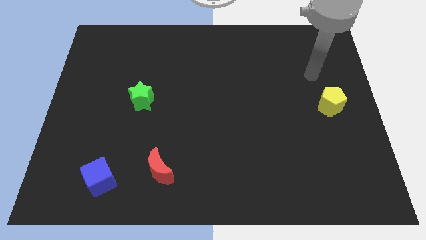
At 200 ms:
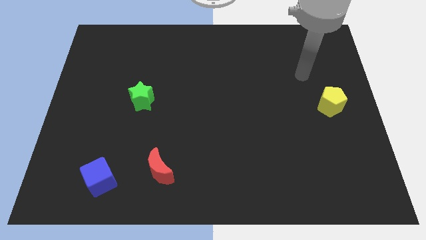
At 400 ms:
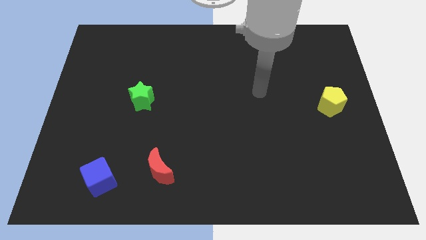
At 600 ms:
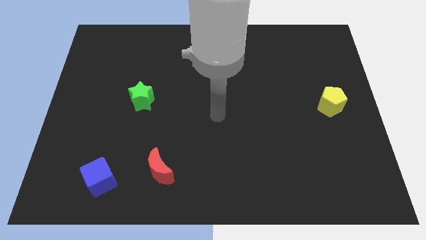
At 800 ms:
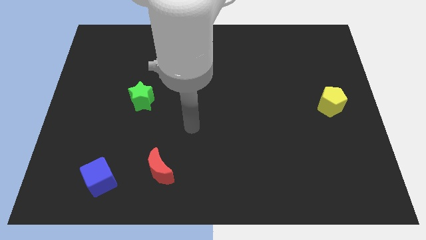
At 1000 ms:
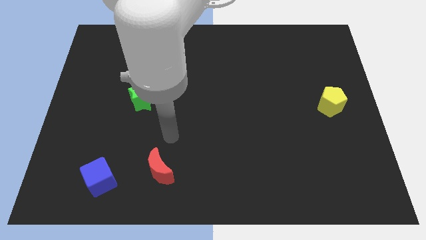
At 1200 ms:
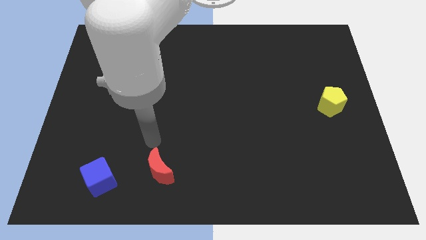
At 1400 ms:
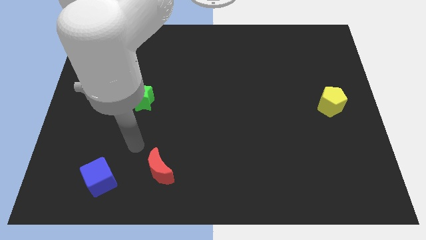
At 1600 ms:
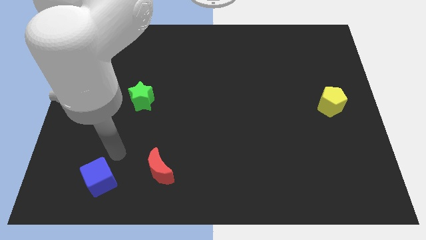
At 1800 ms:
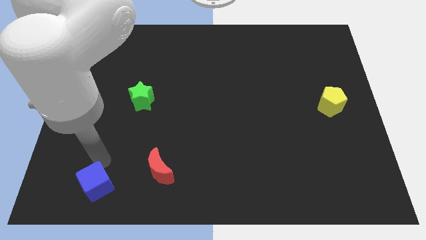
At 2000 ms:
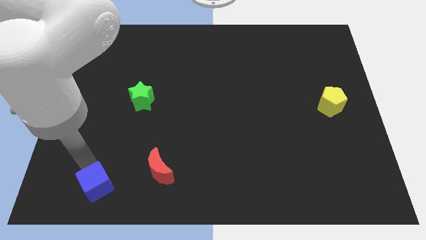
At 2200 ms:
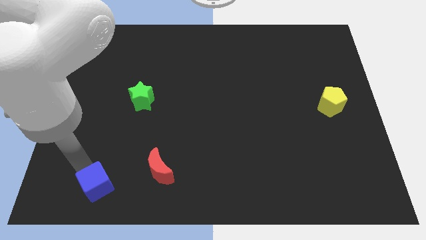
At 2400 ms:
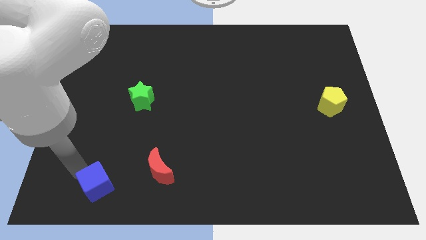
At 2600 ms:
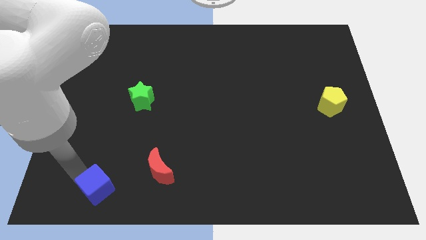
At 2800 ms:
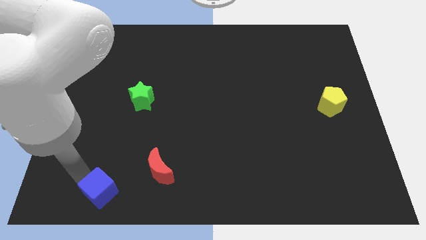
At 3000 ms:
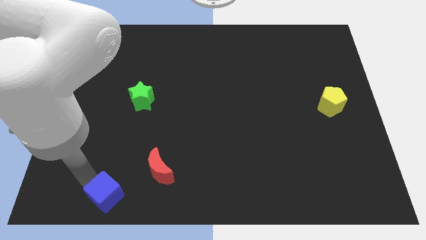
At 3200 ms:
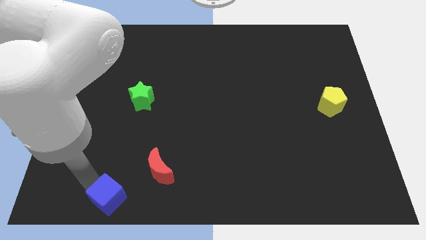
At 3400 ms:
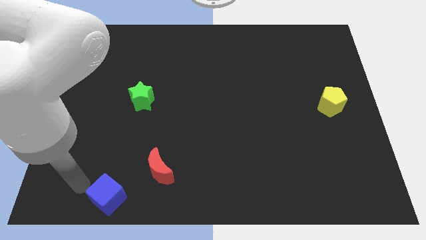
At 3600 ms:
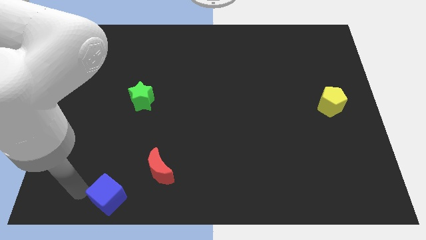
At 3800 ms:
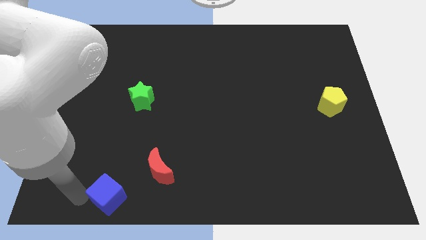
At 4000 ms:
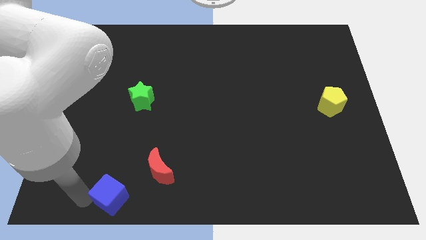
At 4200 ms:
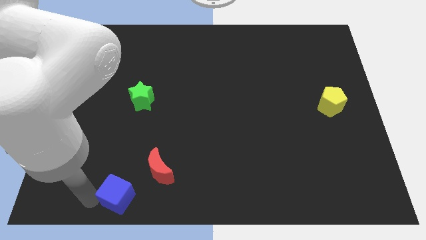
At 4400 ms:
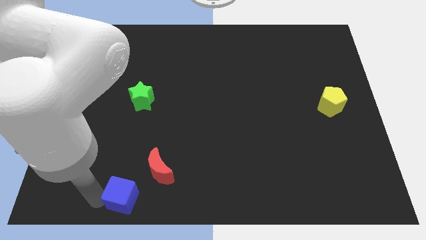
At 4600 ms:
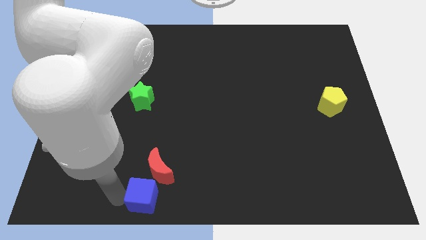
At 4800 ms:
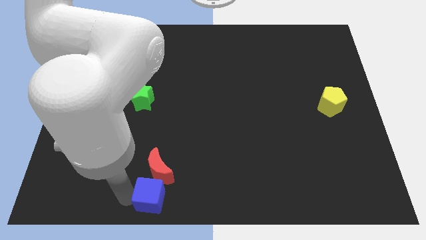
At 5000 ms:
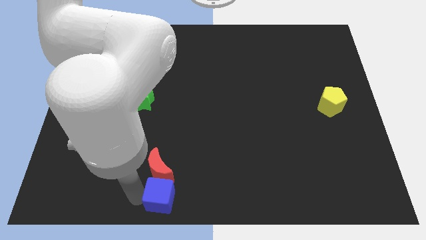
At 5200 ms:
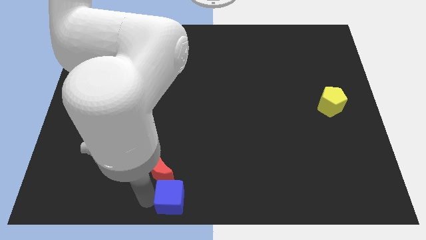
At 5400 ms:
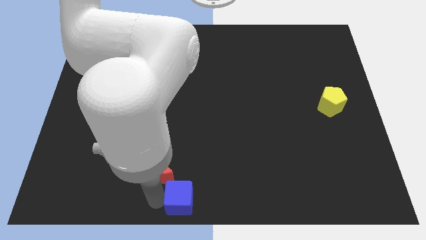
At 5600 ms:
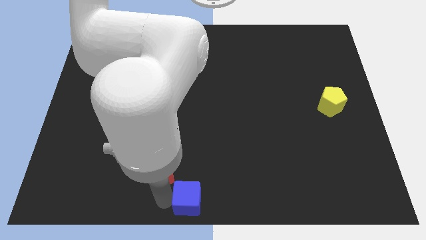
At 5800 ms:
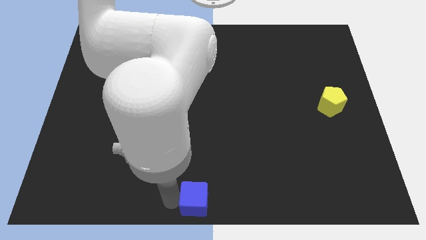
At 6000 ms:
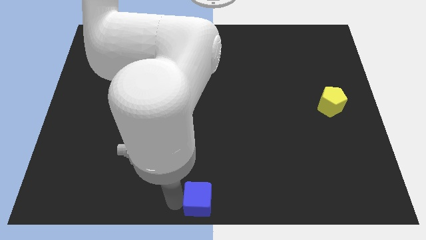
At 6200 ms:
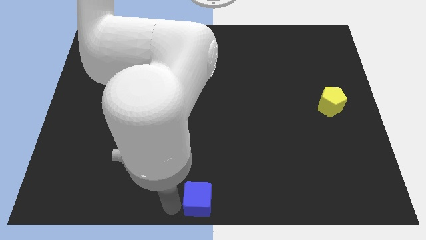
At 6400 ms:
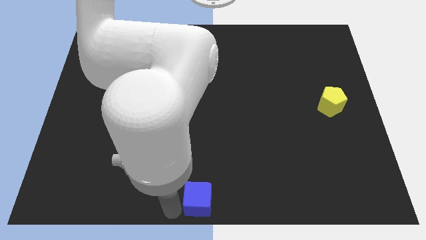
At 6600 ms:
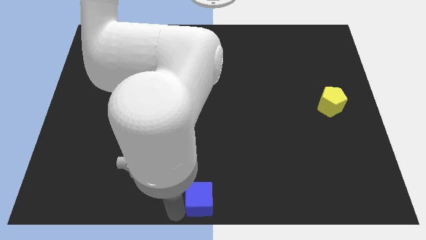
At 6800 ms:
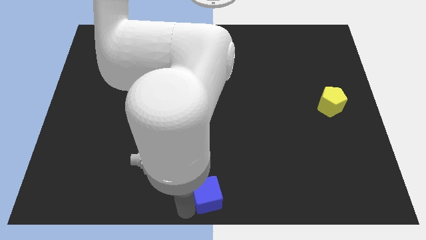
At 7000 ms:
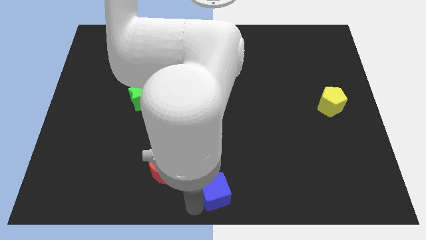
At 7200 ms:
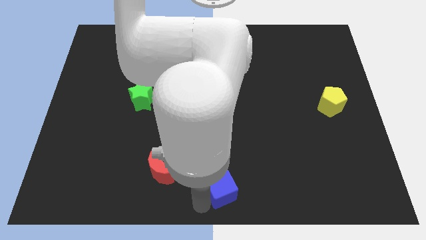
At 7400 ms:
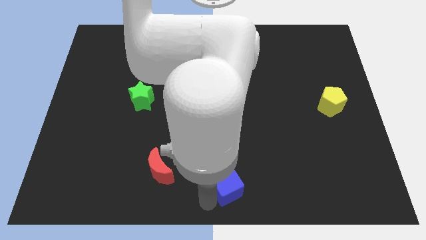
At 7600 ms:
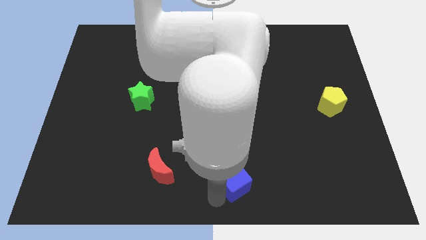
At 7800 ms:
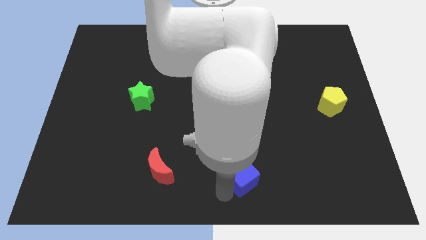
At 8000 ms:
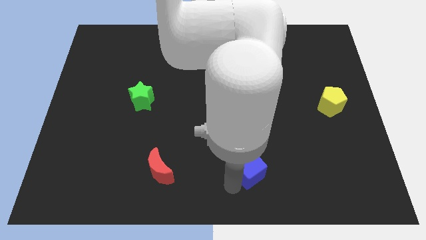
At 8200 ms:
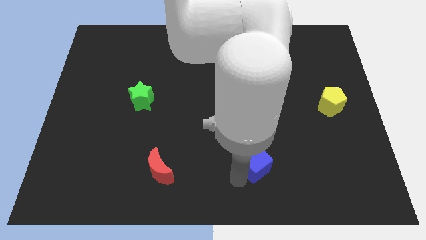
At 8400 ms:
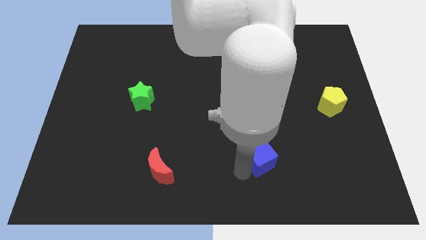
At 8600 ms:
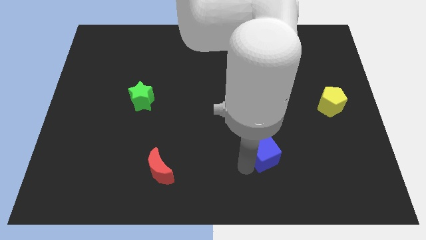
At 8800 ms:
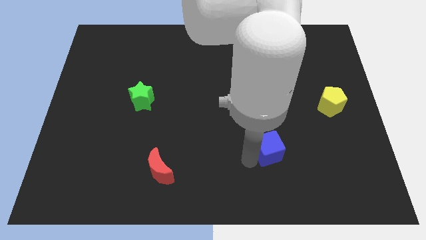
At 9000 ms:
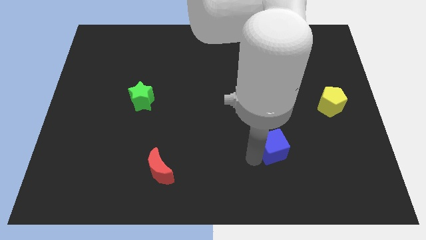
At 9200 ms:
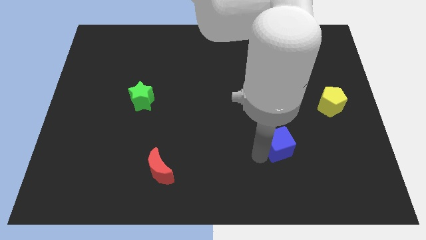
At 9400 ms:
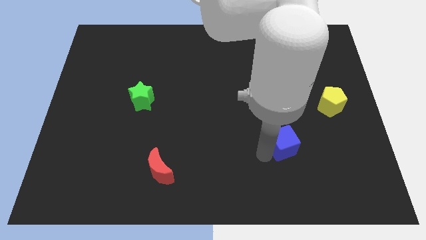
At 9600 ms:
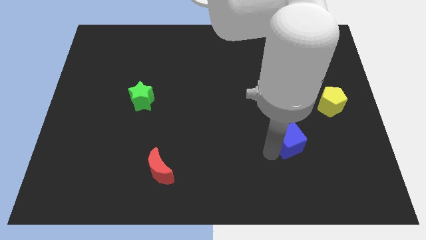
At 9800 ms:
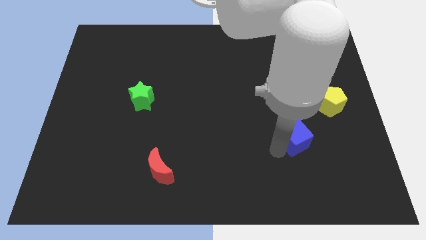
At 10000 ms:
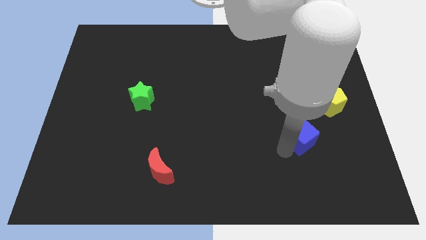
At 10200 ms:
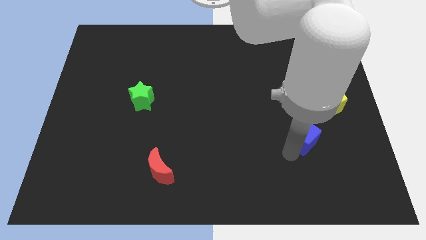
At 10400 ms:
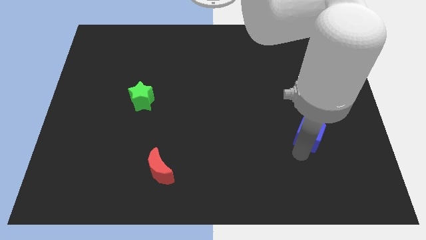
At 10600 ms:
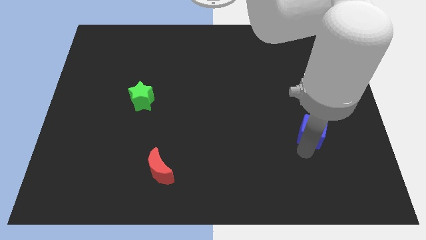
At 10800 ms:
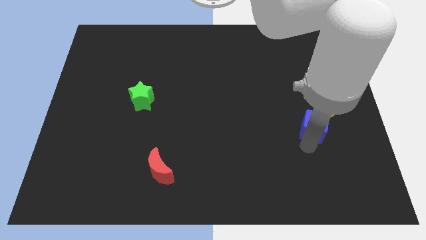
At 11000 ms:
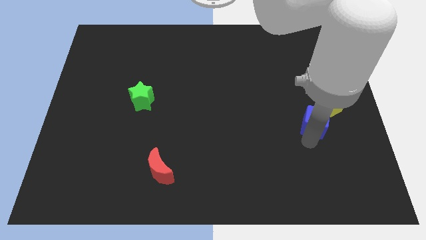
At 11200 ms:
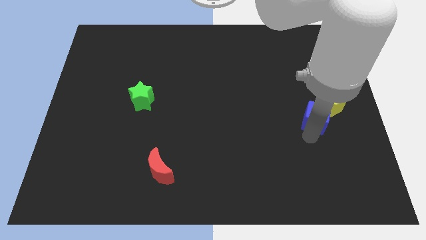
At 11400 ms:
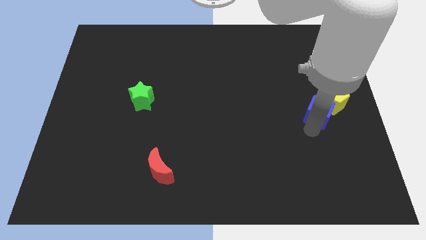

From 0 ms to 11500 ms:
put the cube close to the pentagon

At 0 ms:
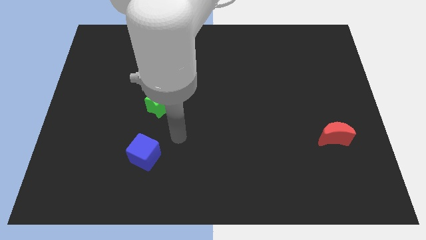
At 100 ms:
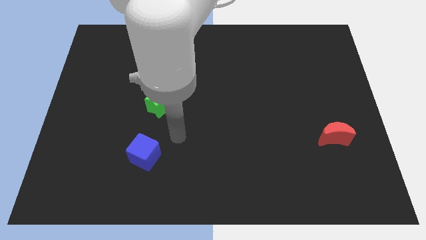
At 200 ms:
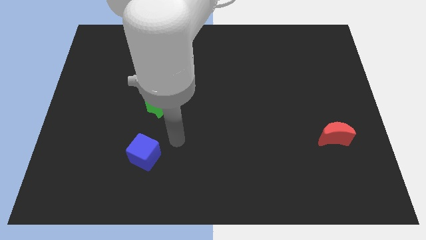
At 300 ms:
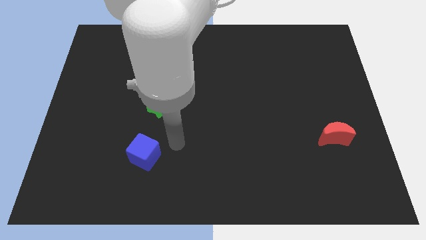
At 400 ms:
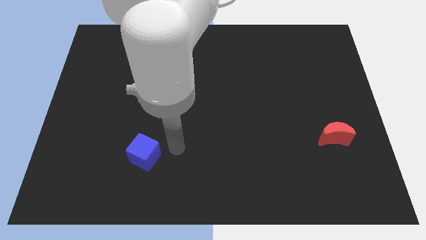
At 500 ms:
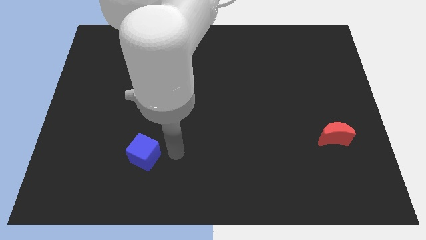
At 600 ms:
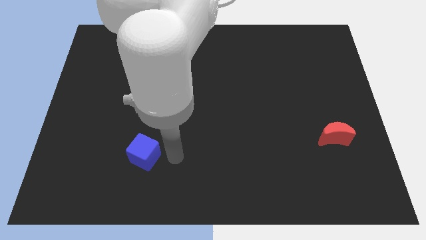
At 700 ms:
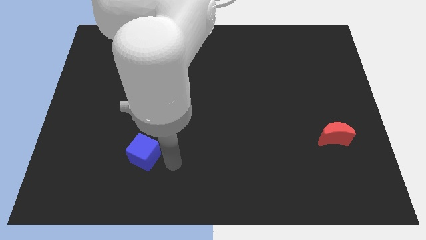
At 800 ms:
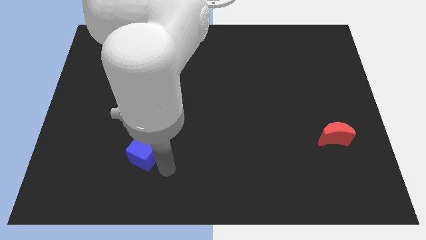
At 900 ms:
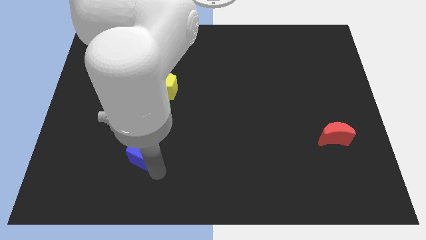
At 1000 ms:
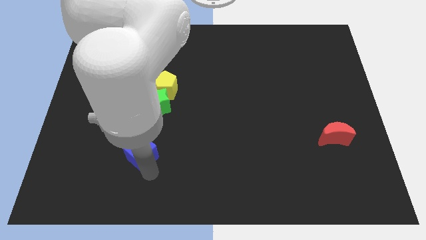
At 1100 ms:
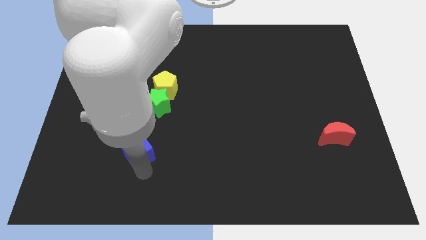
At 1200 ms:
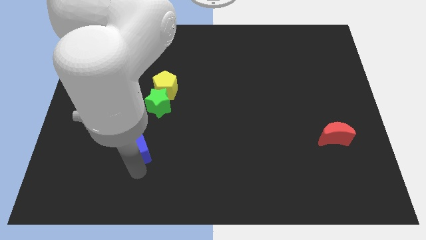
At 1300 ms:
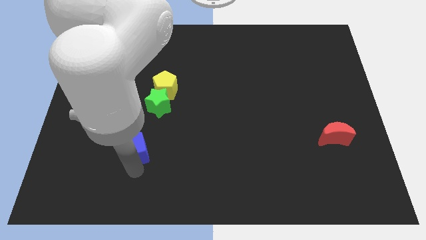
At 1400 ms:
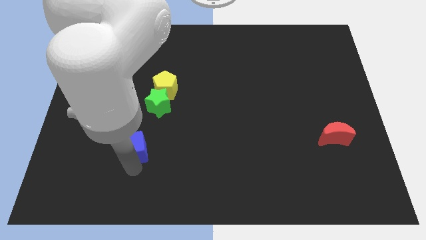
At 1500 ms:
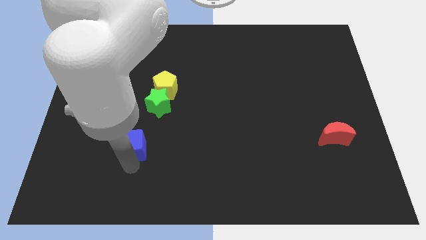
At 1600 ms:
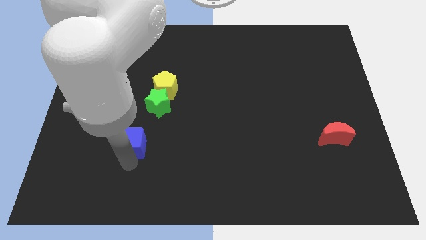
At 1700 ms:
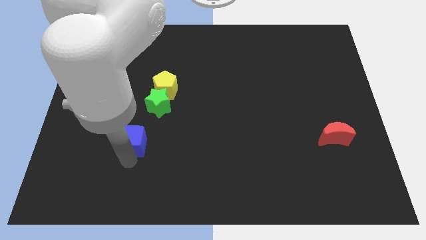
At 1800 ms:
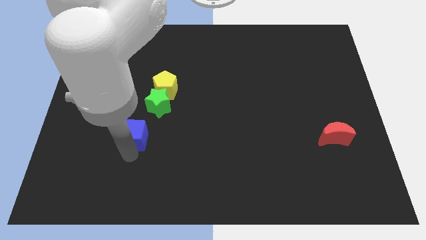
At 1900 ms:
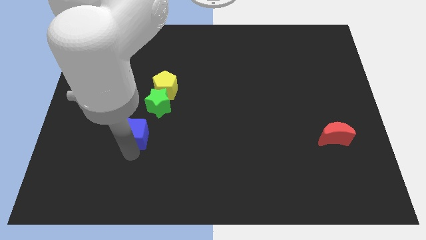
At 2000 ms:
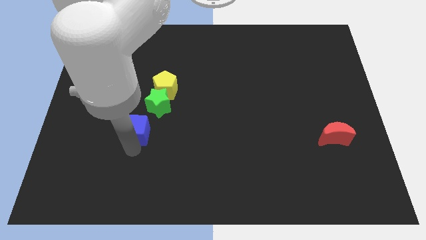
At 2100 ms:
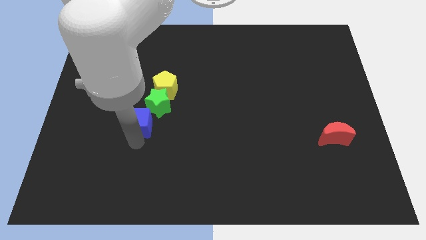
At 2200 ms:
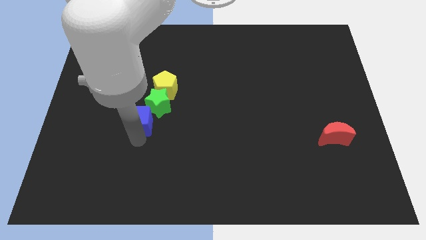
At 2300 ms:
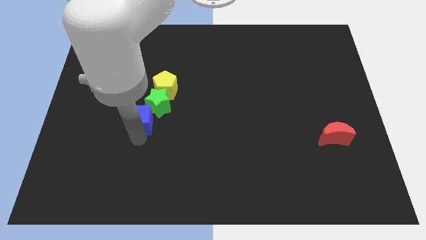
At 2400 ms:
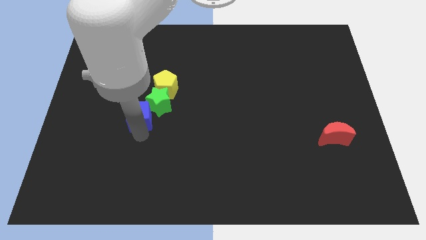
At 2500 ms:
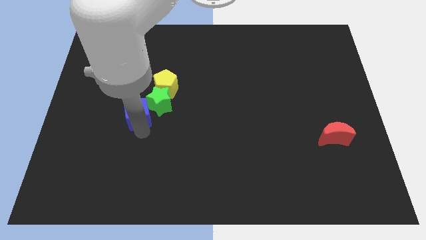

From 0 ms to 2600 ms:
move the cube to the green star
